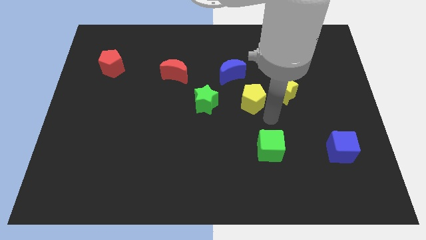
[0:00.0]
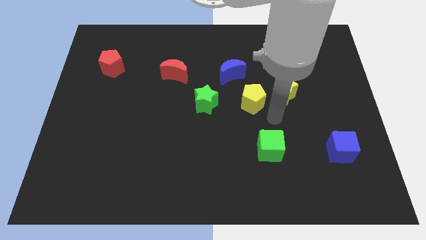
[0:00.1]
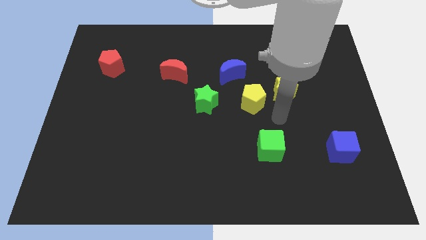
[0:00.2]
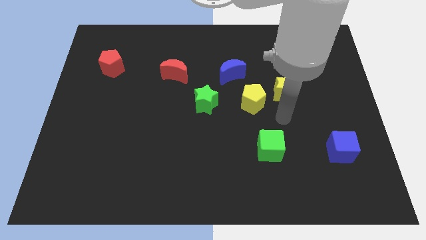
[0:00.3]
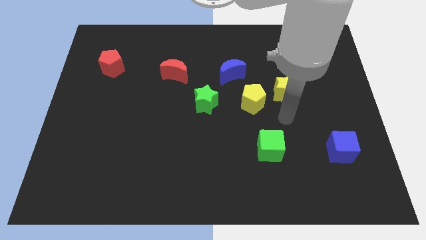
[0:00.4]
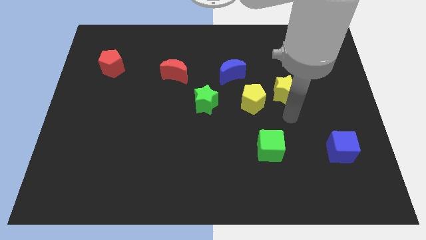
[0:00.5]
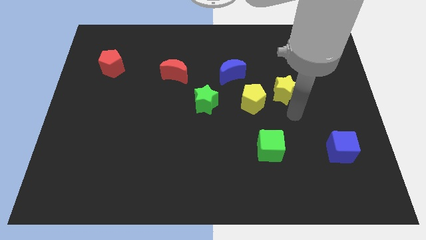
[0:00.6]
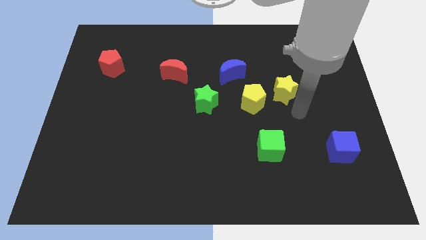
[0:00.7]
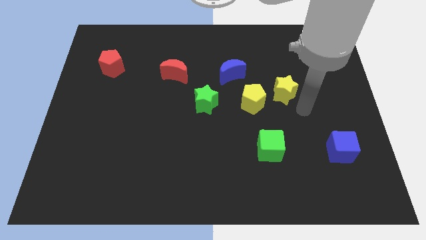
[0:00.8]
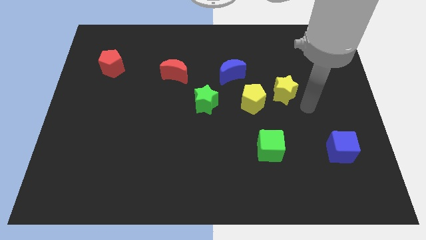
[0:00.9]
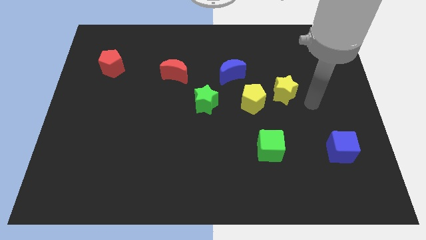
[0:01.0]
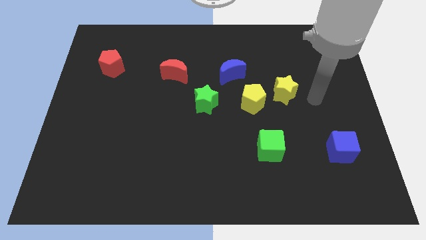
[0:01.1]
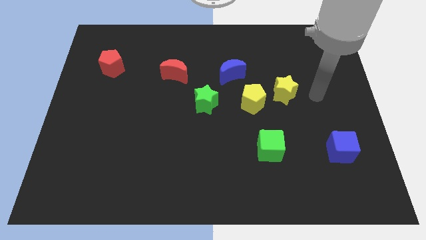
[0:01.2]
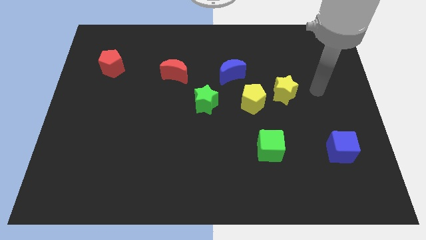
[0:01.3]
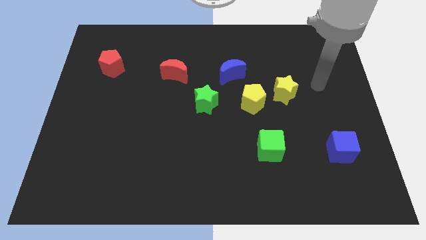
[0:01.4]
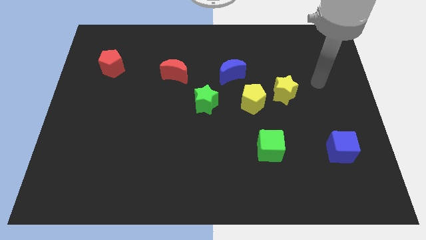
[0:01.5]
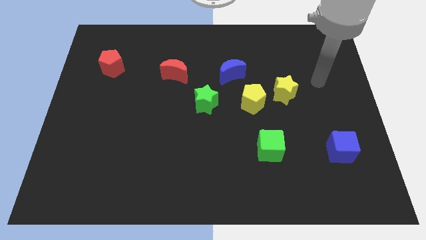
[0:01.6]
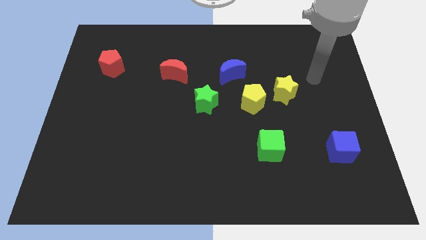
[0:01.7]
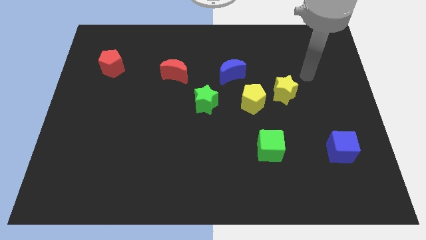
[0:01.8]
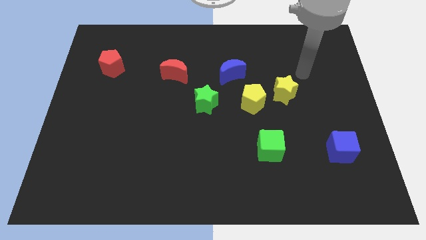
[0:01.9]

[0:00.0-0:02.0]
move your arm to the top of yellow star

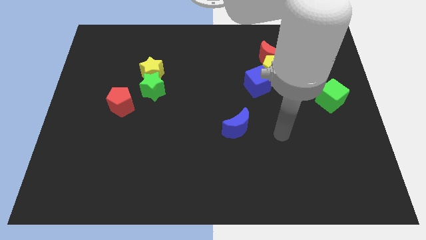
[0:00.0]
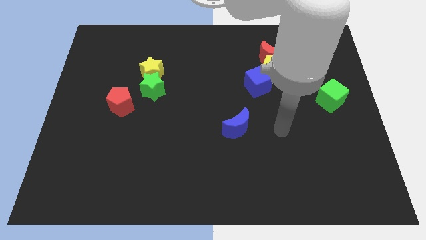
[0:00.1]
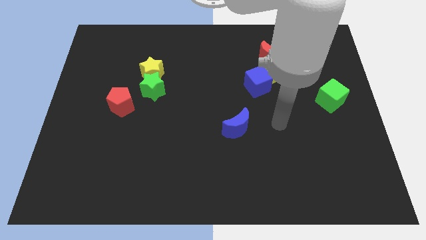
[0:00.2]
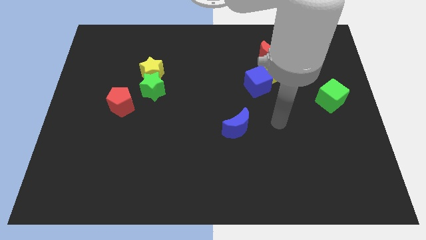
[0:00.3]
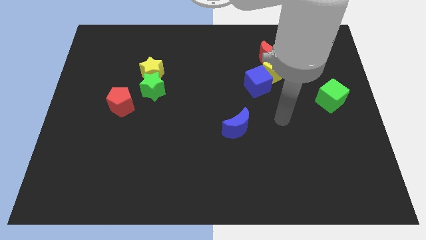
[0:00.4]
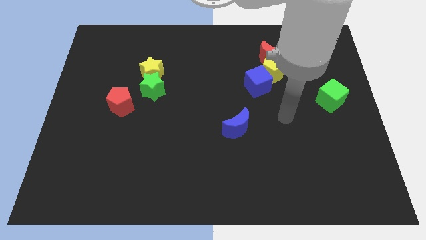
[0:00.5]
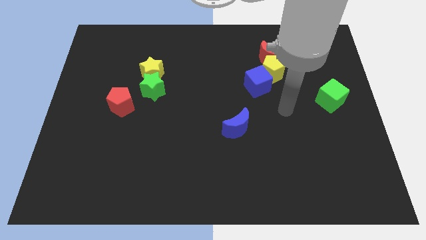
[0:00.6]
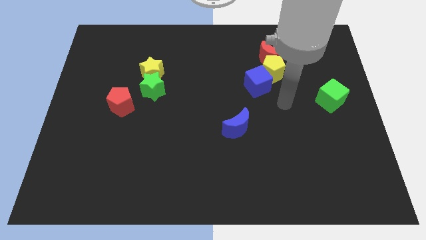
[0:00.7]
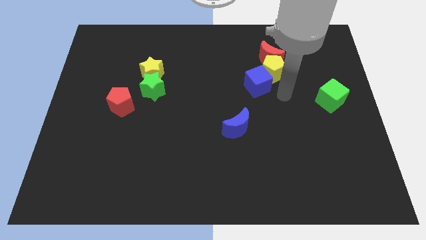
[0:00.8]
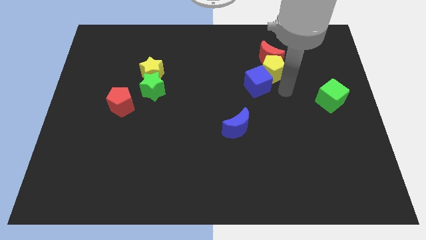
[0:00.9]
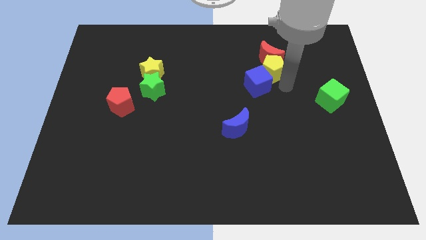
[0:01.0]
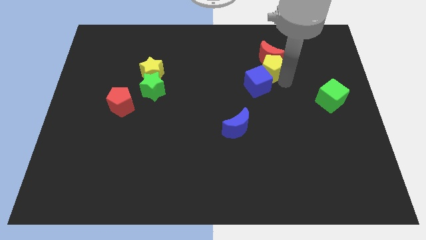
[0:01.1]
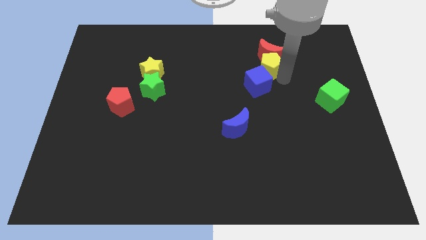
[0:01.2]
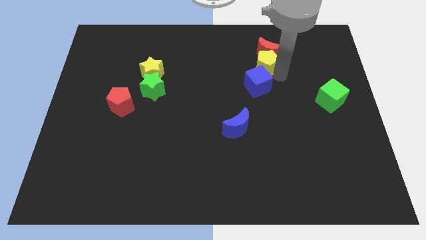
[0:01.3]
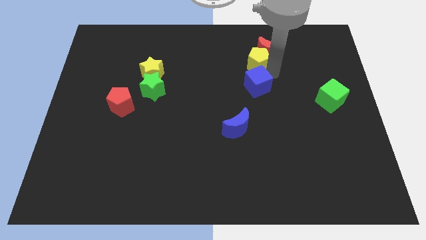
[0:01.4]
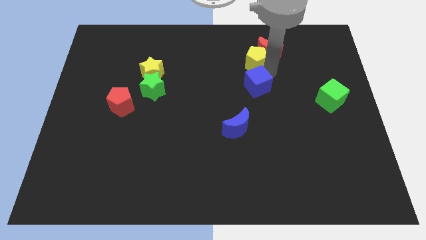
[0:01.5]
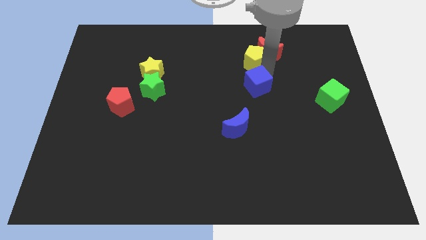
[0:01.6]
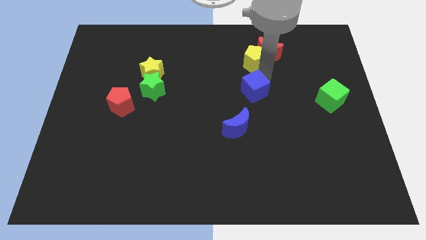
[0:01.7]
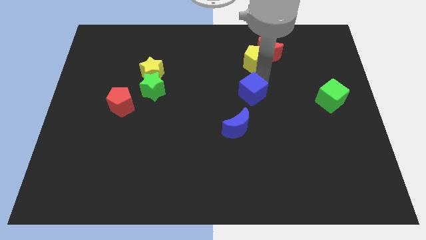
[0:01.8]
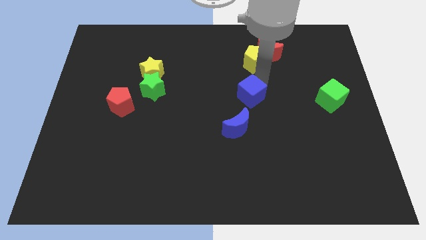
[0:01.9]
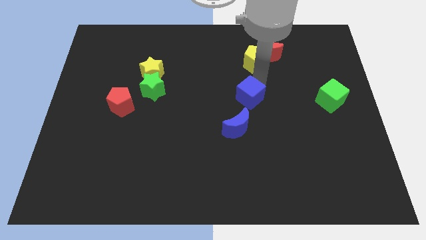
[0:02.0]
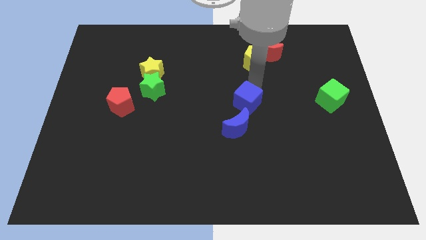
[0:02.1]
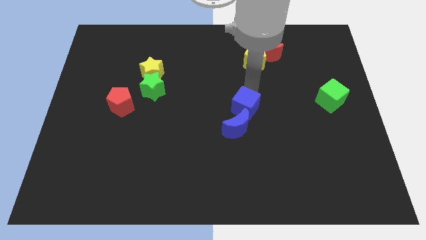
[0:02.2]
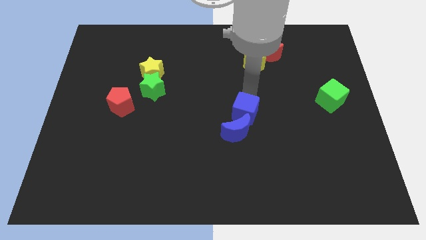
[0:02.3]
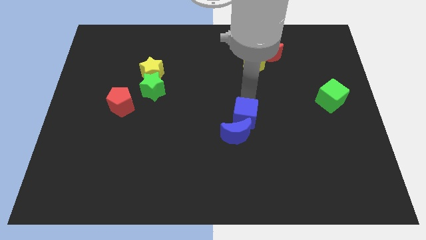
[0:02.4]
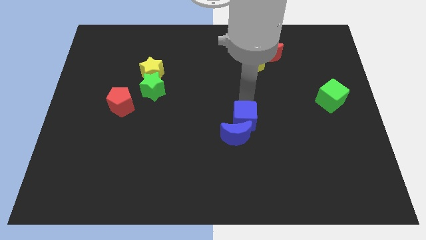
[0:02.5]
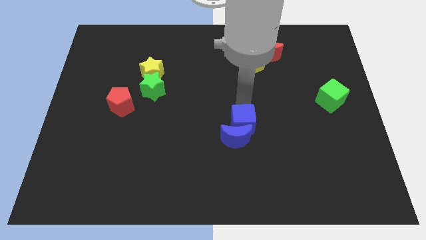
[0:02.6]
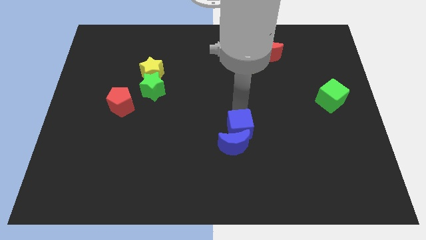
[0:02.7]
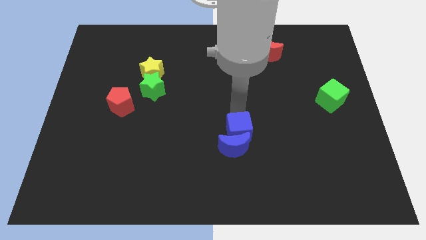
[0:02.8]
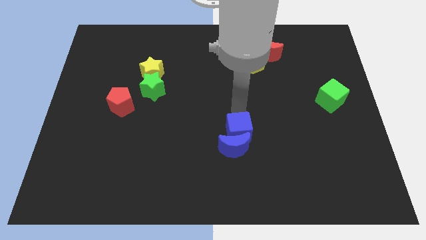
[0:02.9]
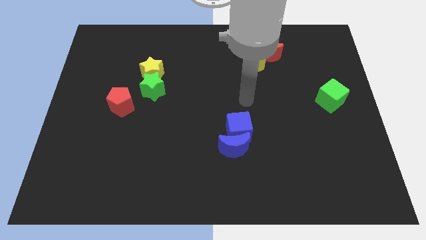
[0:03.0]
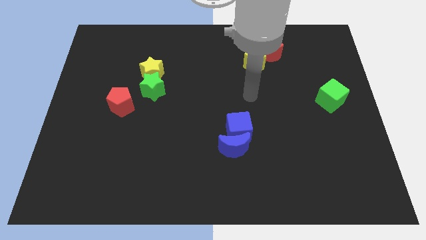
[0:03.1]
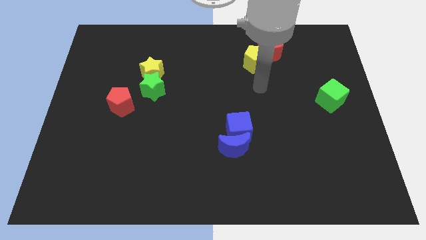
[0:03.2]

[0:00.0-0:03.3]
separate the blue blocks from yellow pentagon

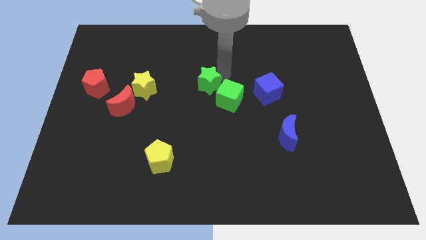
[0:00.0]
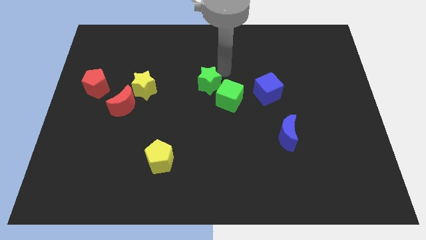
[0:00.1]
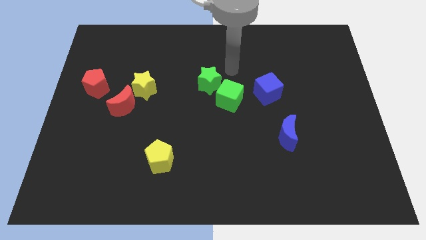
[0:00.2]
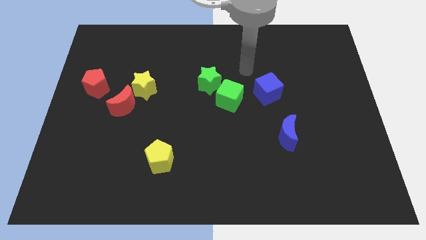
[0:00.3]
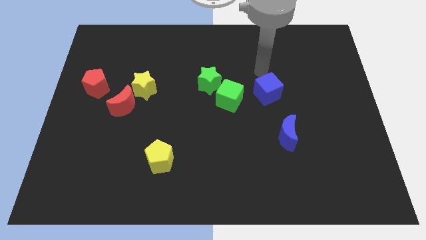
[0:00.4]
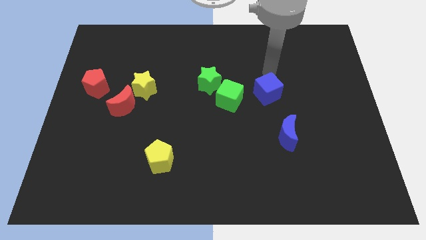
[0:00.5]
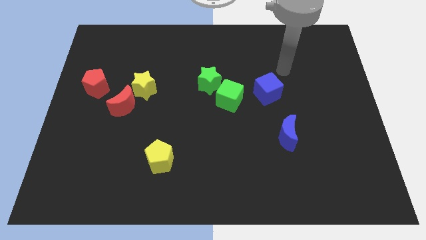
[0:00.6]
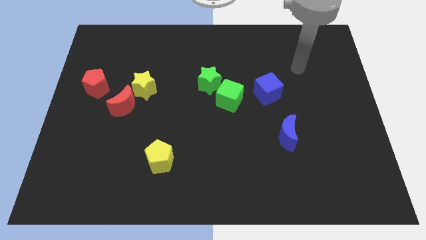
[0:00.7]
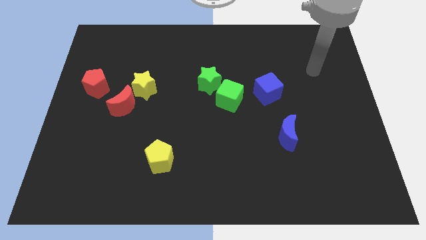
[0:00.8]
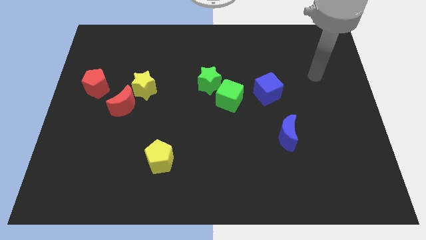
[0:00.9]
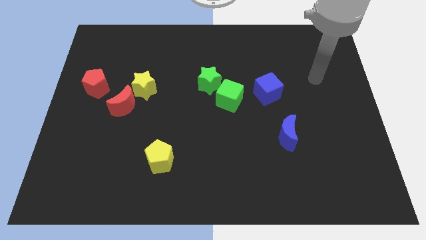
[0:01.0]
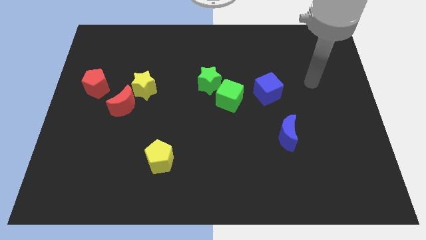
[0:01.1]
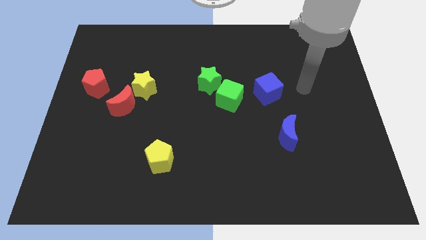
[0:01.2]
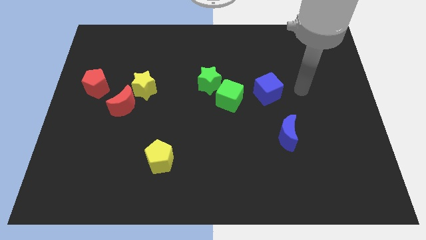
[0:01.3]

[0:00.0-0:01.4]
move your arm away from the green star

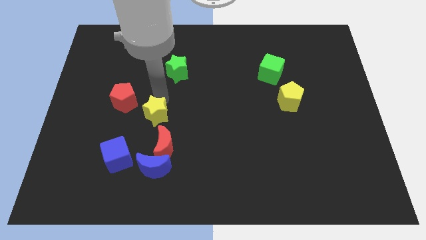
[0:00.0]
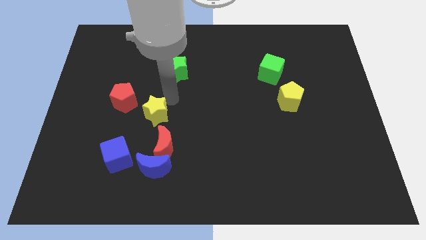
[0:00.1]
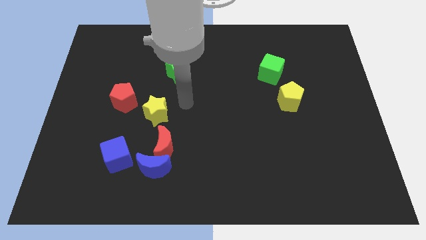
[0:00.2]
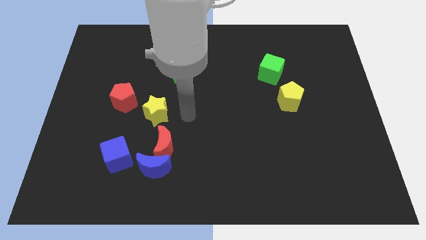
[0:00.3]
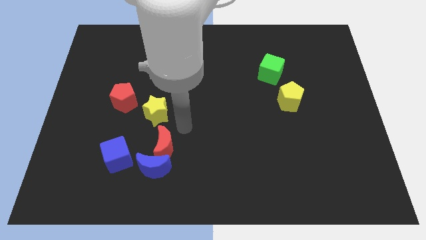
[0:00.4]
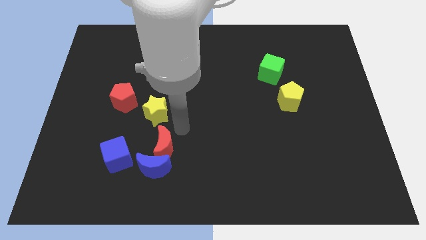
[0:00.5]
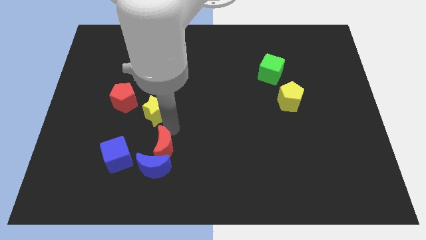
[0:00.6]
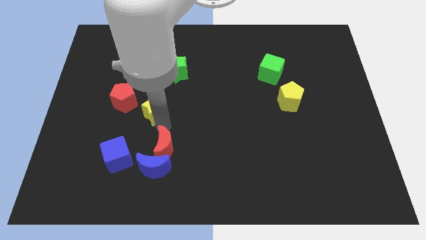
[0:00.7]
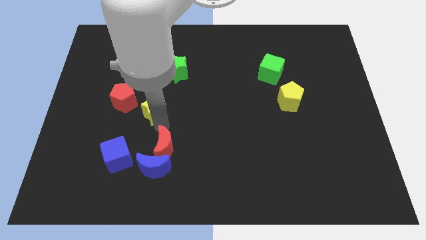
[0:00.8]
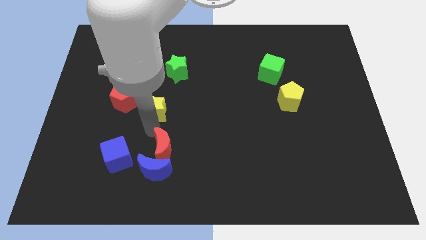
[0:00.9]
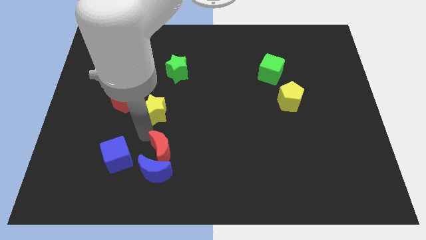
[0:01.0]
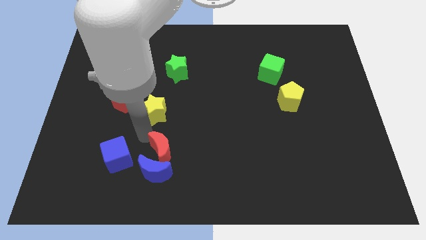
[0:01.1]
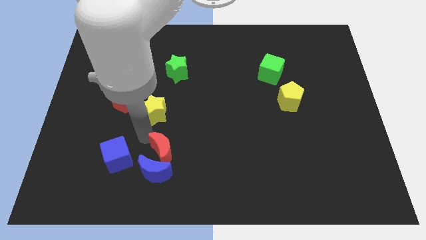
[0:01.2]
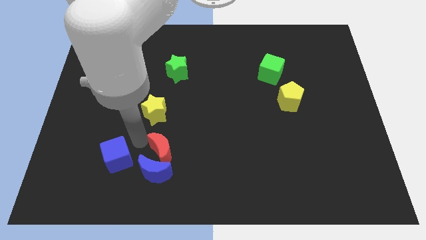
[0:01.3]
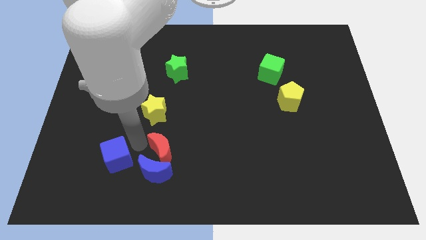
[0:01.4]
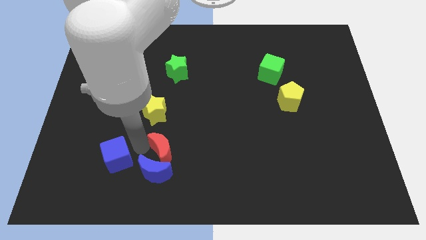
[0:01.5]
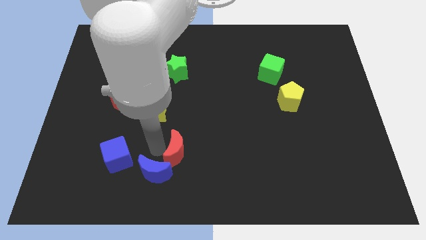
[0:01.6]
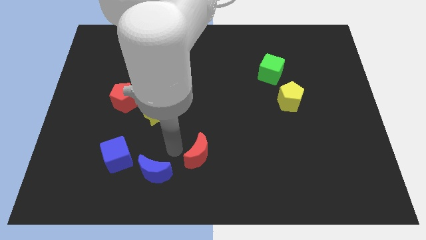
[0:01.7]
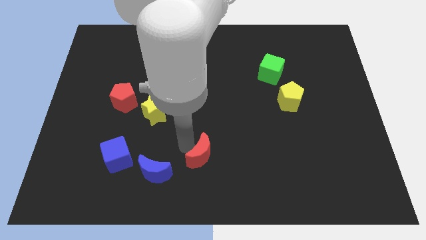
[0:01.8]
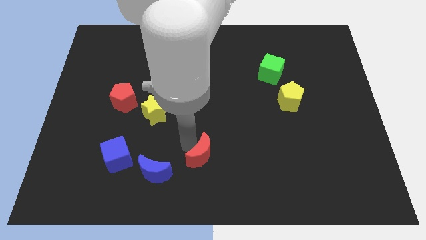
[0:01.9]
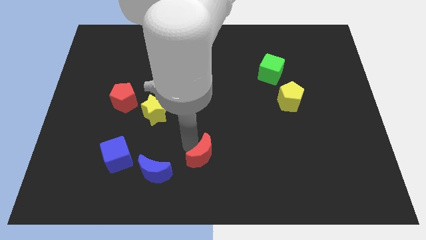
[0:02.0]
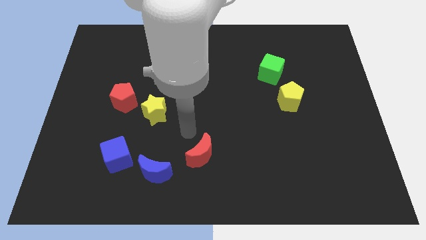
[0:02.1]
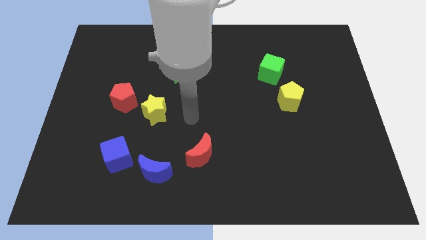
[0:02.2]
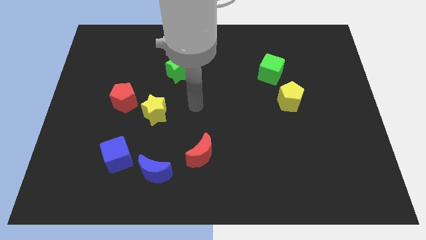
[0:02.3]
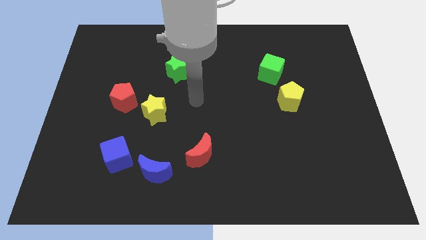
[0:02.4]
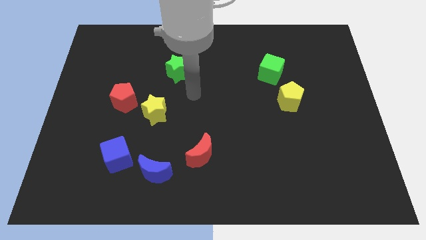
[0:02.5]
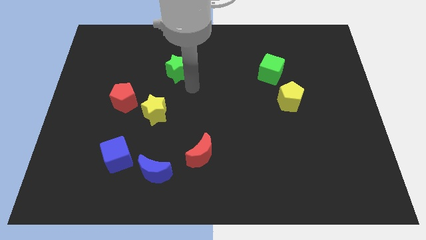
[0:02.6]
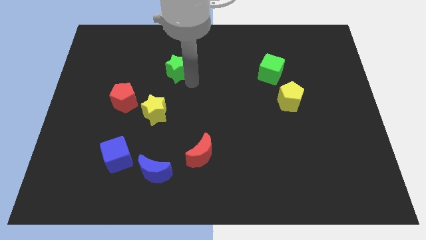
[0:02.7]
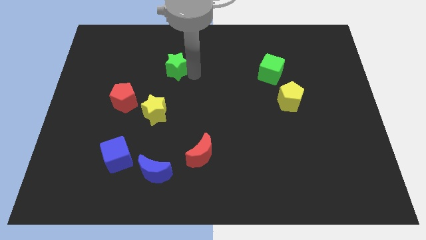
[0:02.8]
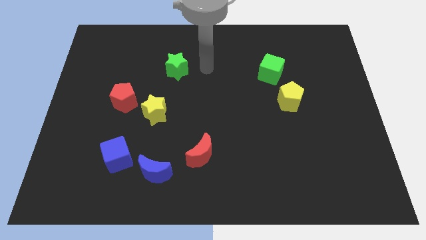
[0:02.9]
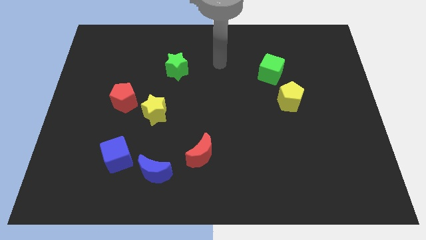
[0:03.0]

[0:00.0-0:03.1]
slide red moon to the right of blue cube
